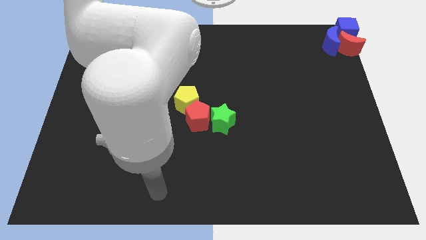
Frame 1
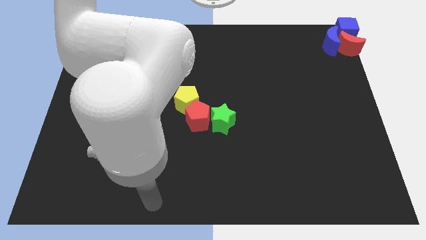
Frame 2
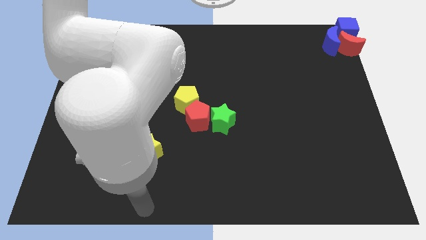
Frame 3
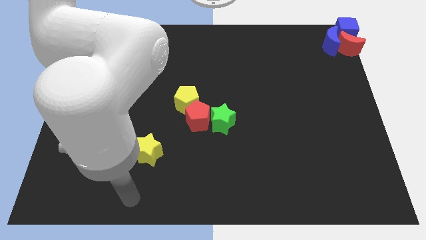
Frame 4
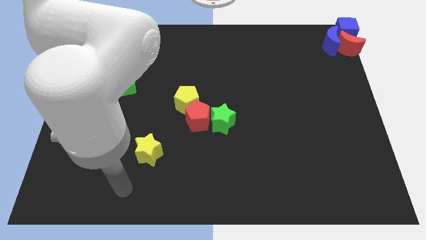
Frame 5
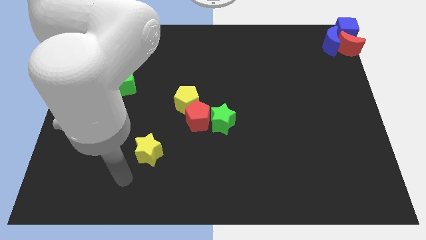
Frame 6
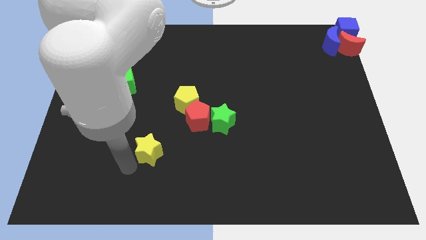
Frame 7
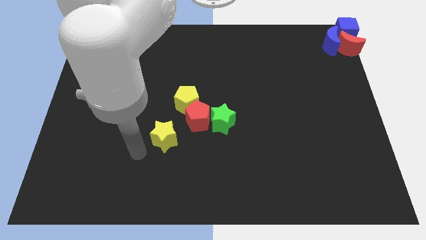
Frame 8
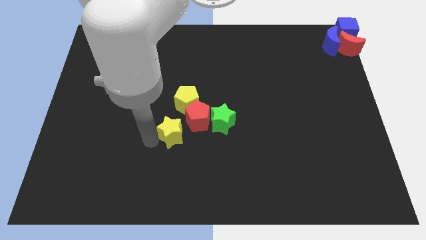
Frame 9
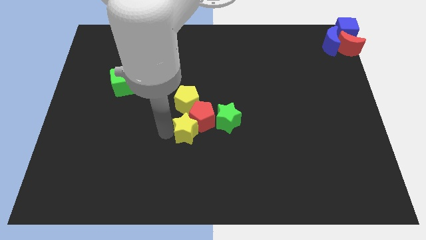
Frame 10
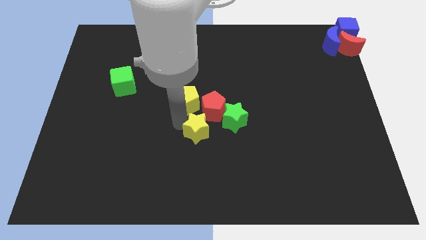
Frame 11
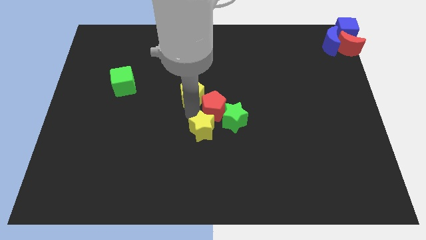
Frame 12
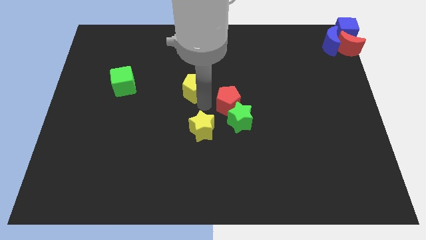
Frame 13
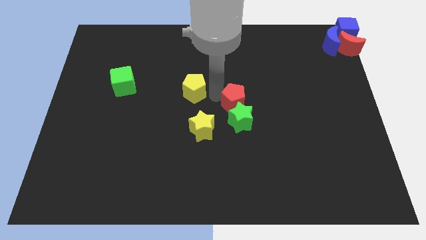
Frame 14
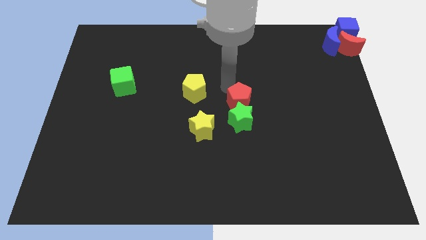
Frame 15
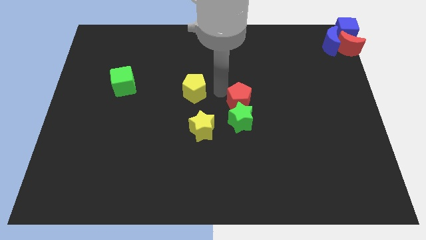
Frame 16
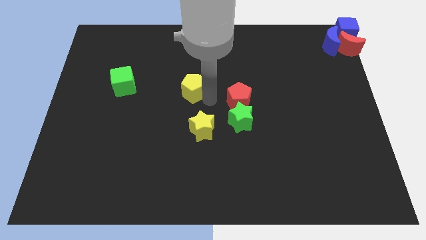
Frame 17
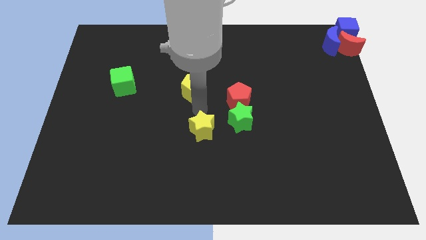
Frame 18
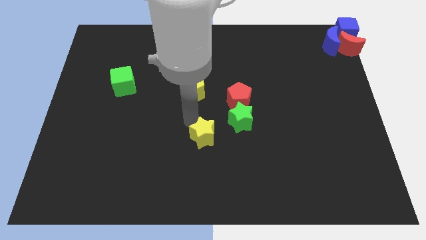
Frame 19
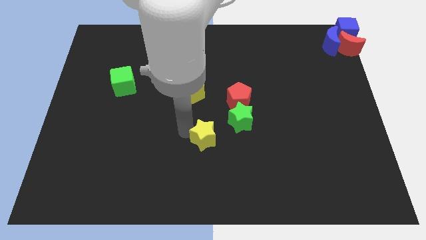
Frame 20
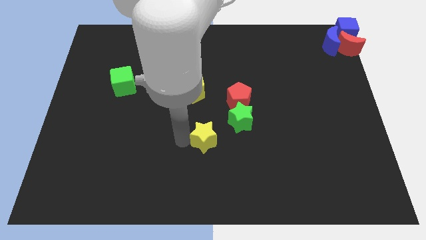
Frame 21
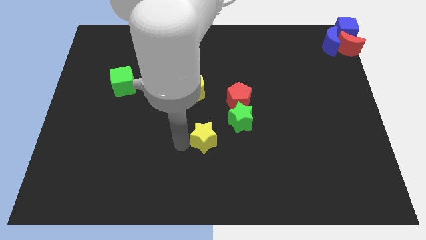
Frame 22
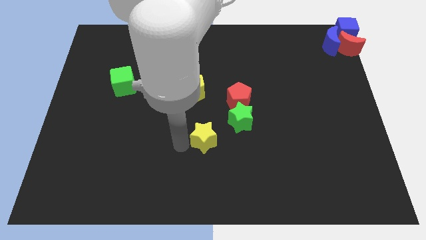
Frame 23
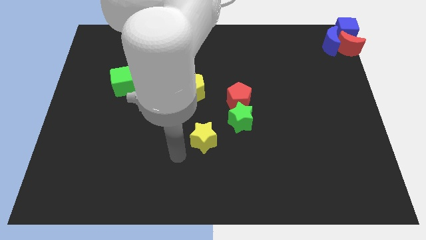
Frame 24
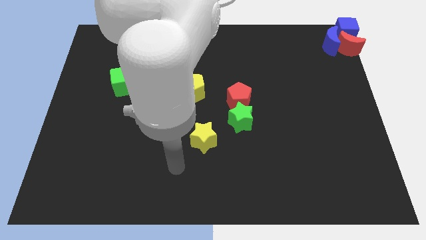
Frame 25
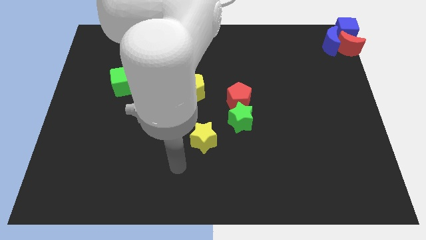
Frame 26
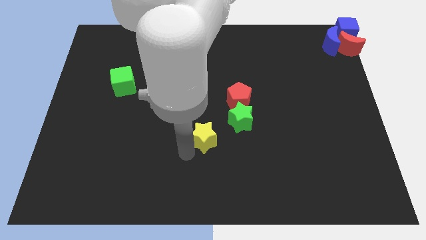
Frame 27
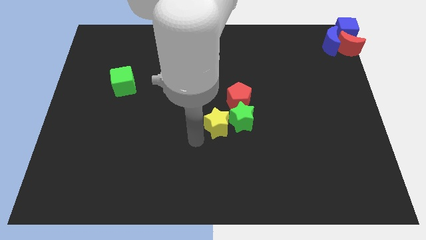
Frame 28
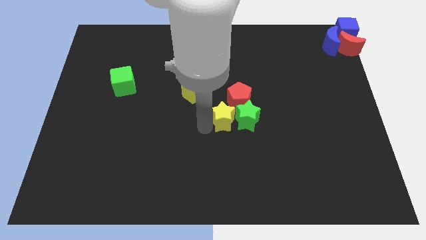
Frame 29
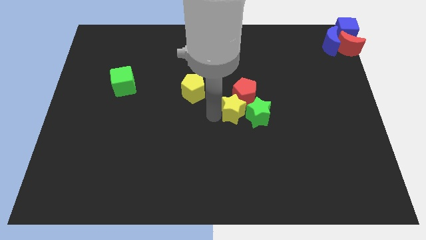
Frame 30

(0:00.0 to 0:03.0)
push the yellow star along with the red pentagon to the right of the yellow pentagon

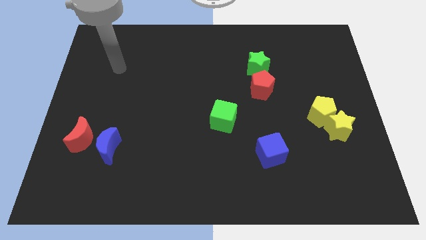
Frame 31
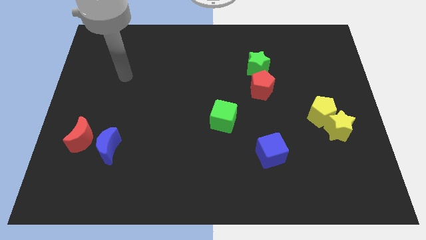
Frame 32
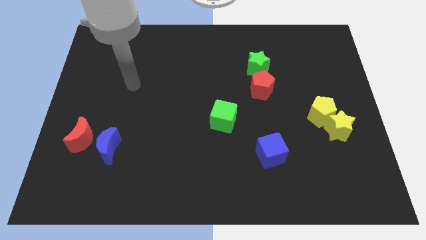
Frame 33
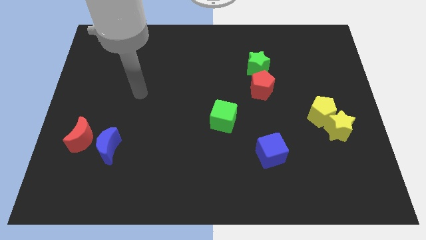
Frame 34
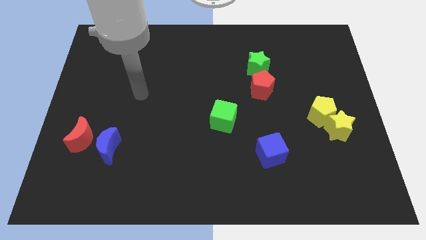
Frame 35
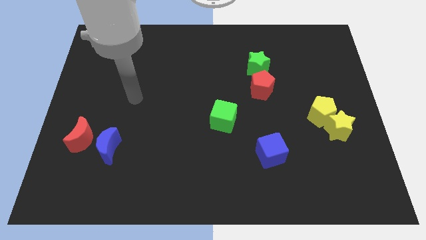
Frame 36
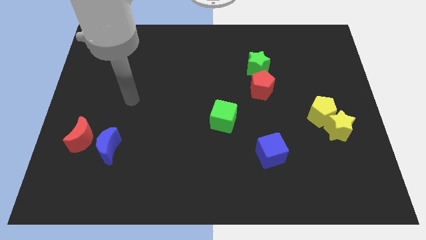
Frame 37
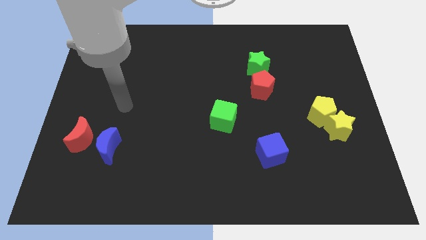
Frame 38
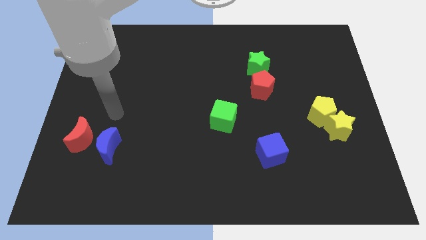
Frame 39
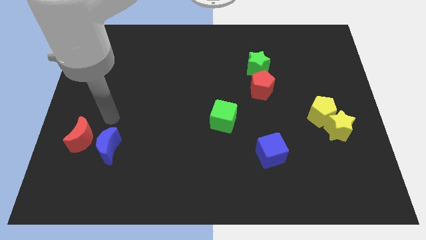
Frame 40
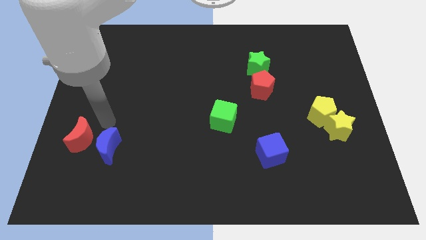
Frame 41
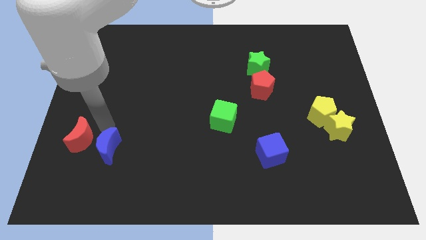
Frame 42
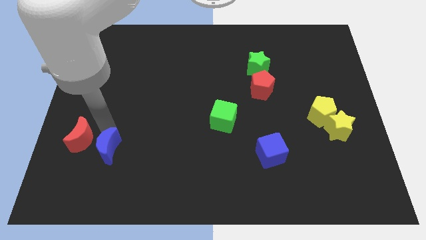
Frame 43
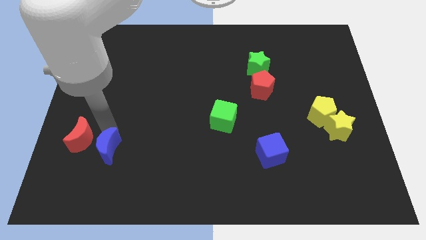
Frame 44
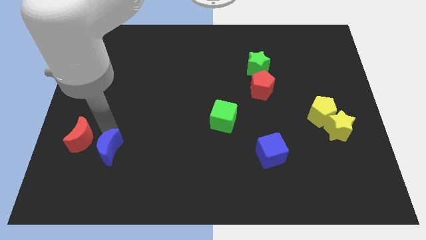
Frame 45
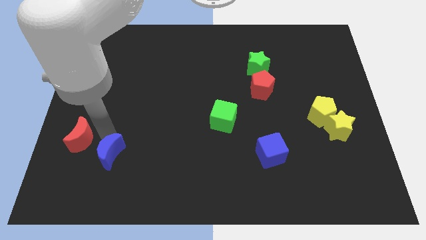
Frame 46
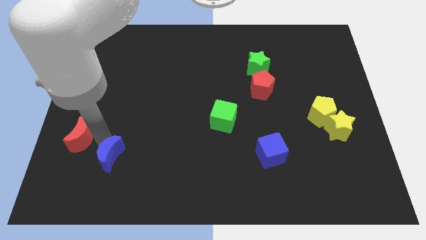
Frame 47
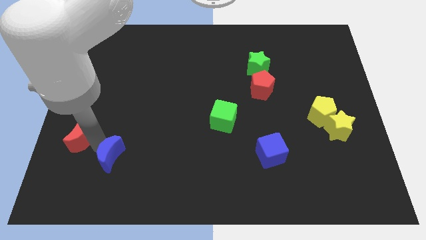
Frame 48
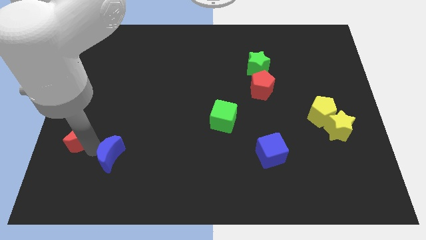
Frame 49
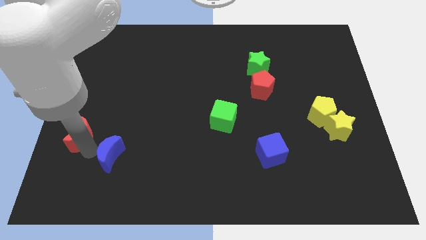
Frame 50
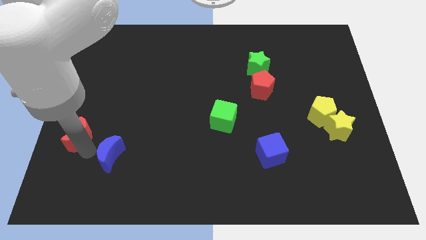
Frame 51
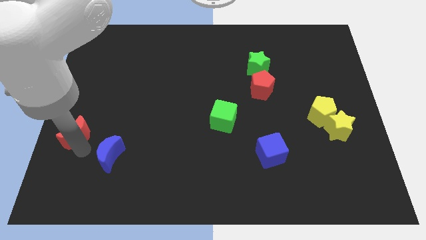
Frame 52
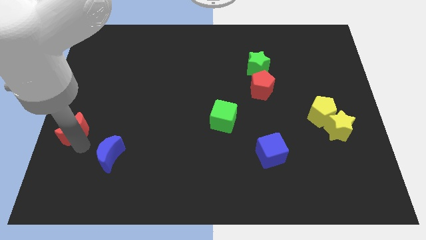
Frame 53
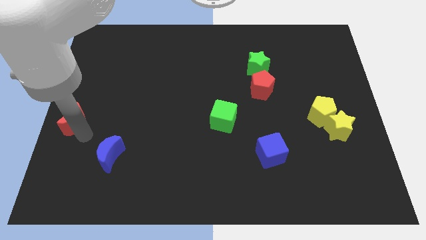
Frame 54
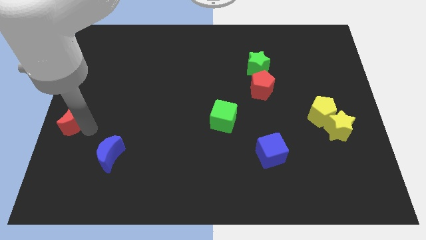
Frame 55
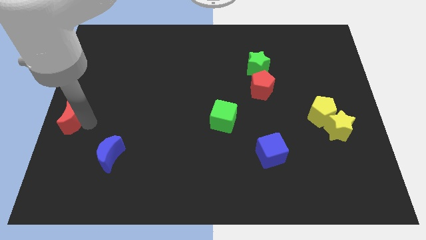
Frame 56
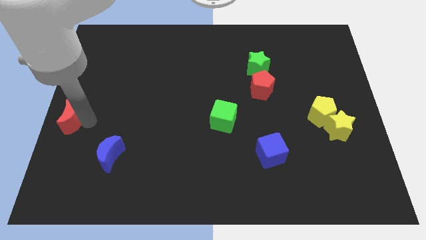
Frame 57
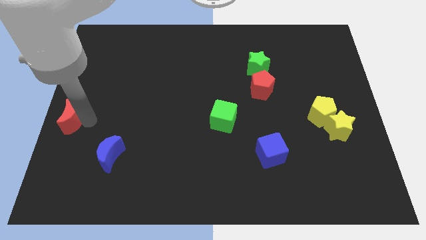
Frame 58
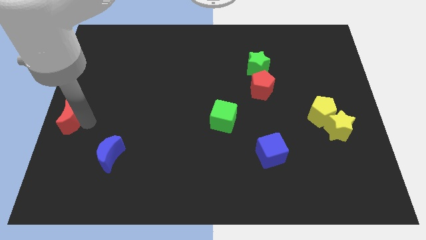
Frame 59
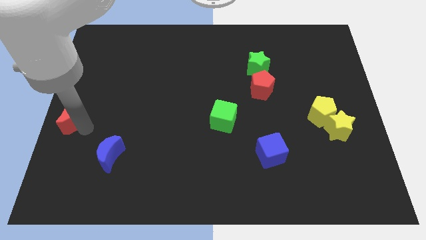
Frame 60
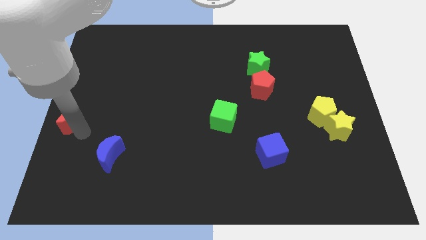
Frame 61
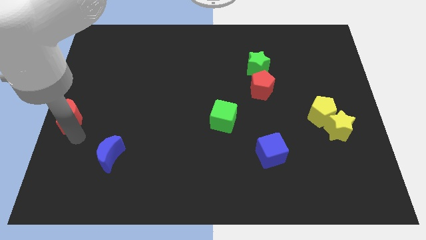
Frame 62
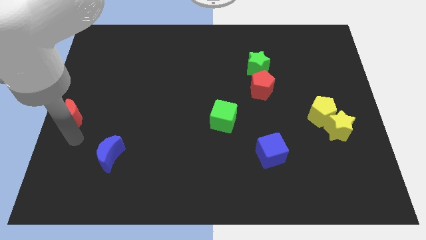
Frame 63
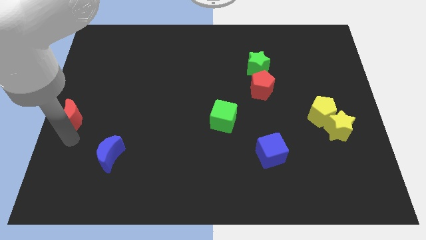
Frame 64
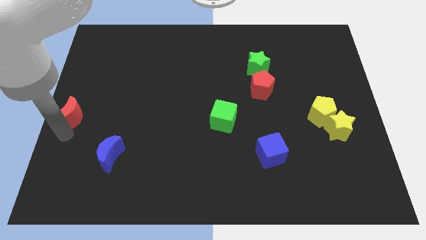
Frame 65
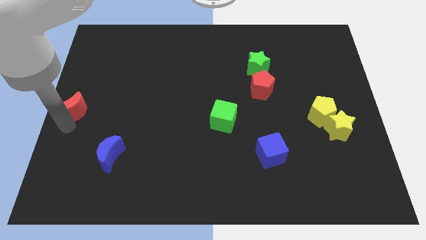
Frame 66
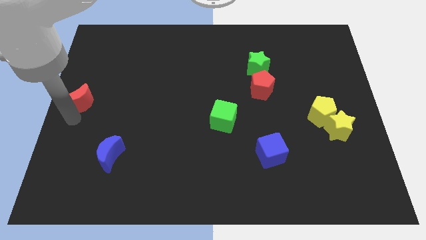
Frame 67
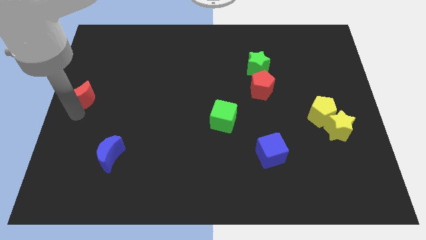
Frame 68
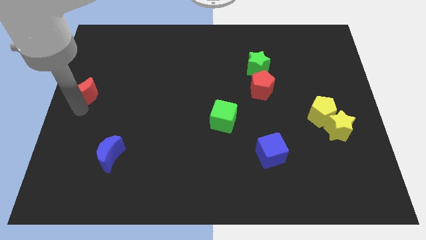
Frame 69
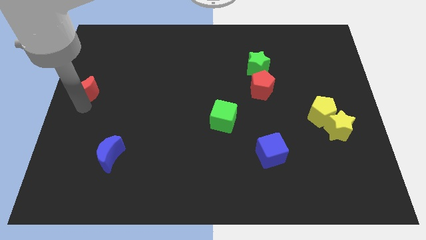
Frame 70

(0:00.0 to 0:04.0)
separate the red crescent from the blue crescent

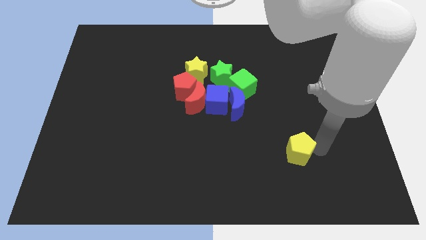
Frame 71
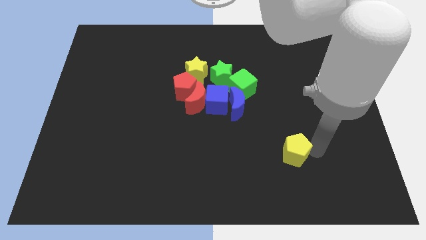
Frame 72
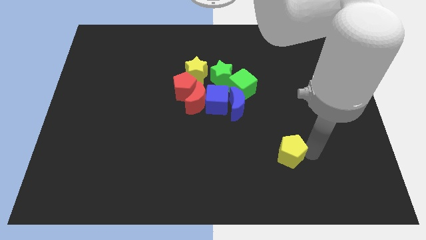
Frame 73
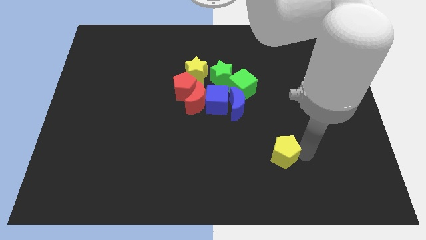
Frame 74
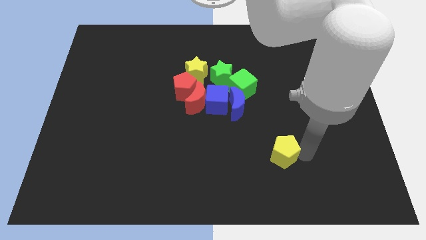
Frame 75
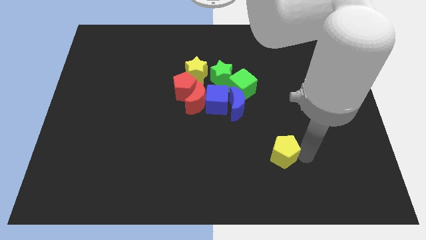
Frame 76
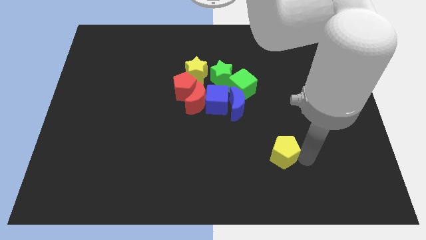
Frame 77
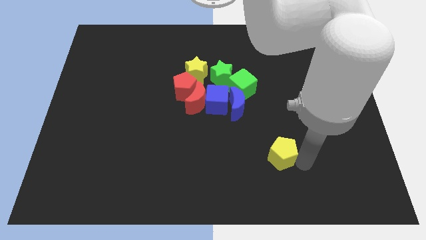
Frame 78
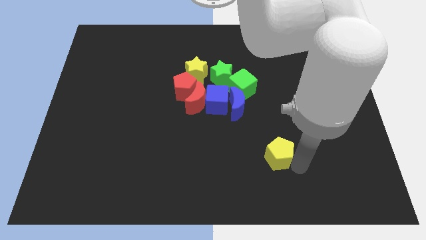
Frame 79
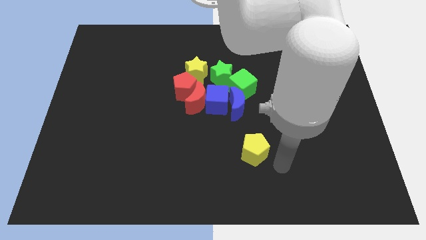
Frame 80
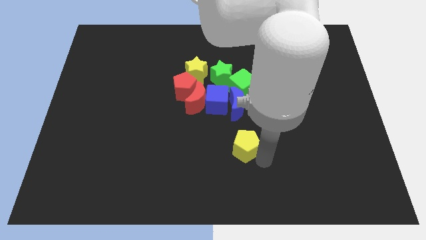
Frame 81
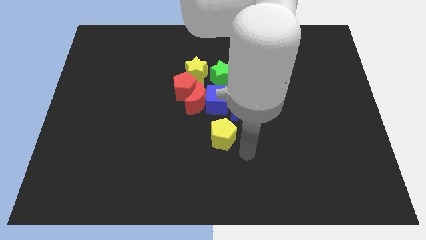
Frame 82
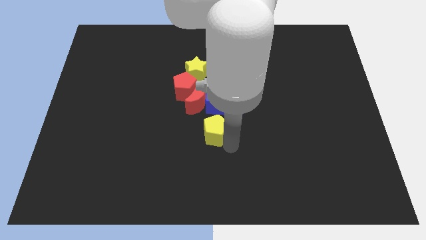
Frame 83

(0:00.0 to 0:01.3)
push the yellow pentagon to the bottom of the blue cube

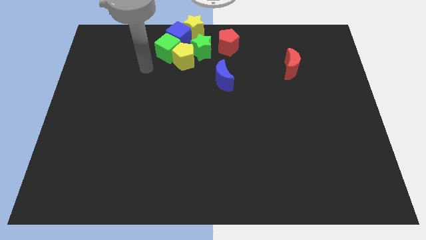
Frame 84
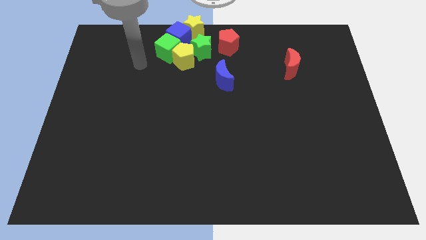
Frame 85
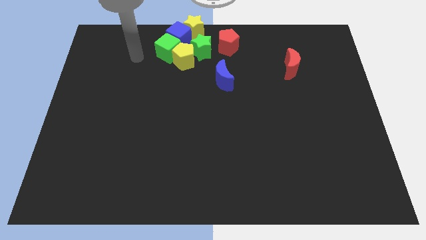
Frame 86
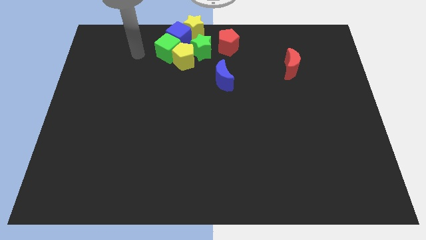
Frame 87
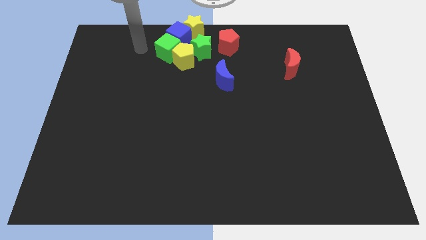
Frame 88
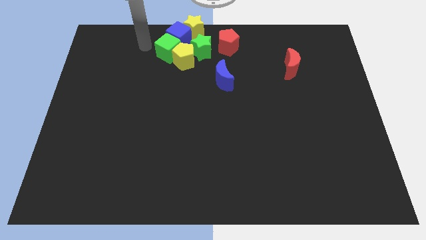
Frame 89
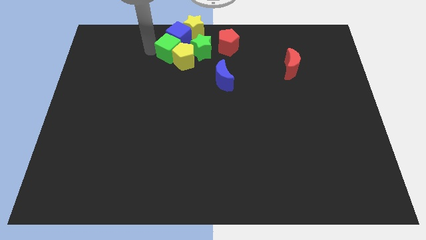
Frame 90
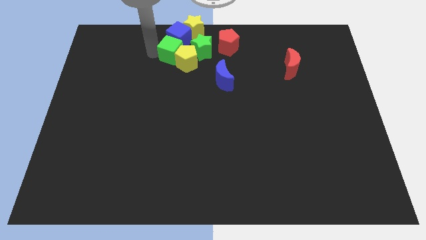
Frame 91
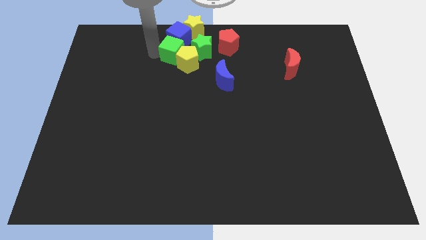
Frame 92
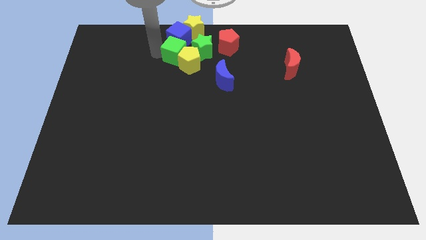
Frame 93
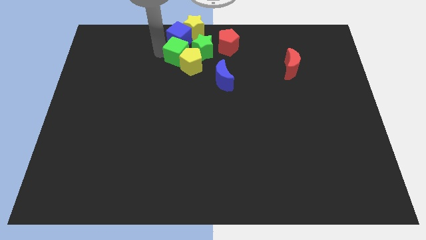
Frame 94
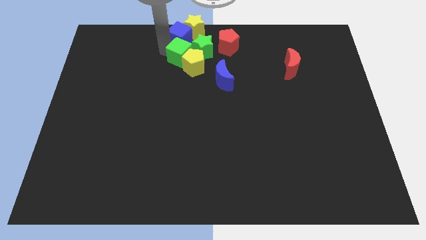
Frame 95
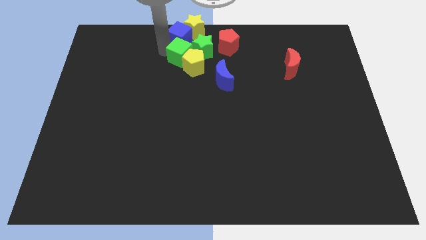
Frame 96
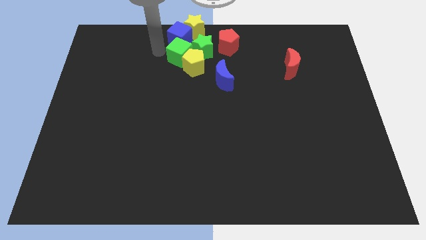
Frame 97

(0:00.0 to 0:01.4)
slightly push the green cube along with the yellow pentagon towards the blue moon
